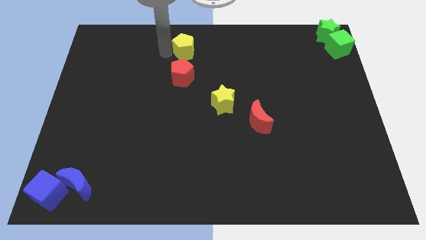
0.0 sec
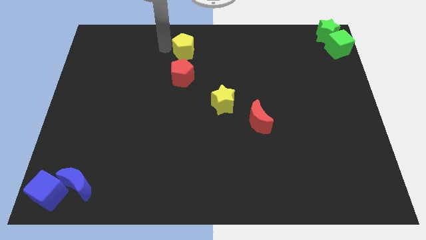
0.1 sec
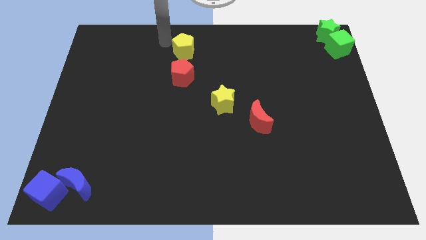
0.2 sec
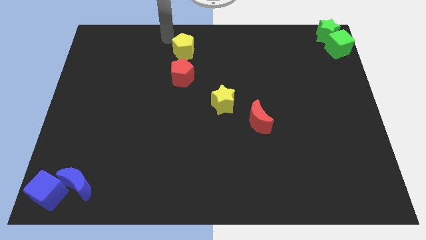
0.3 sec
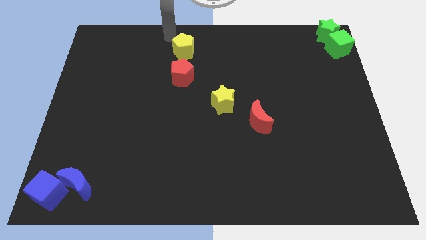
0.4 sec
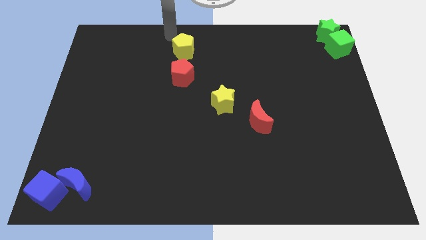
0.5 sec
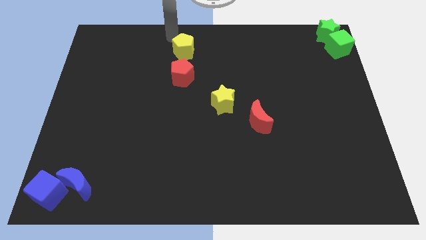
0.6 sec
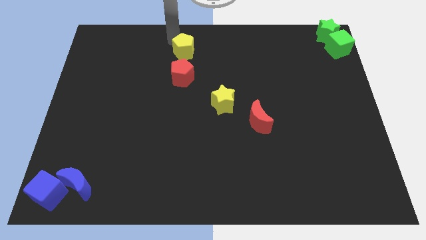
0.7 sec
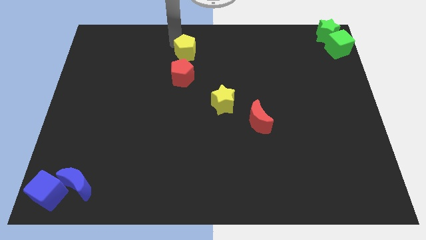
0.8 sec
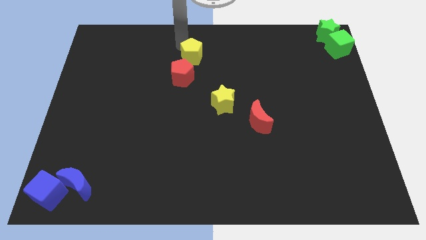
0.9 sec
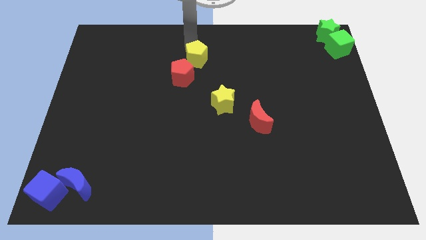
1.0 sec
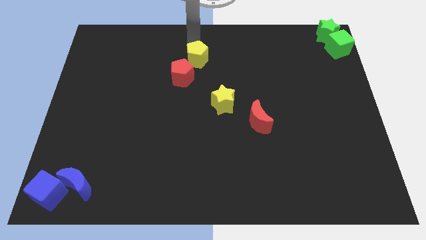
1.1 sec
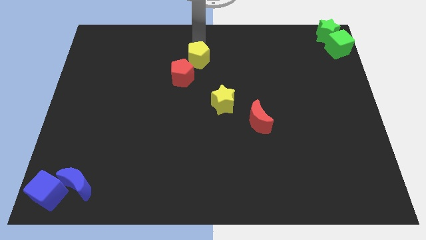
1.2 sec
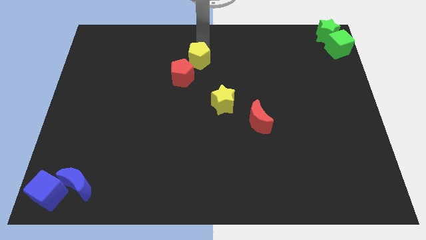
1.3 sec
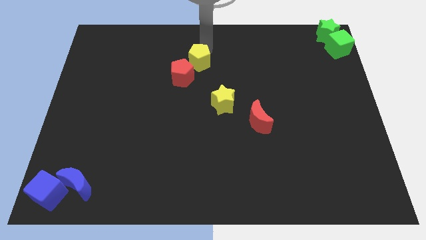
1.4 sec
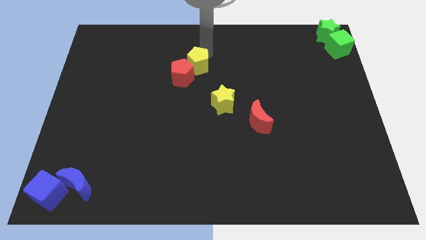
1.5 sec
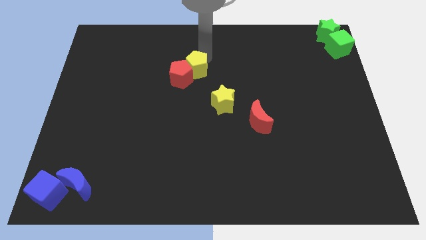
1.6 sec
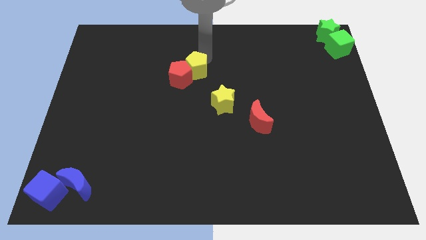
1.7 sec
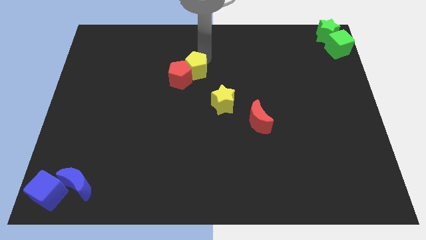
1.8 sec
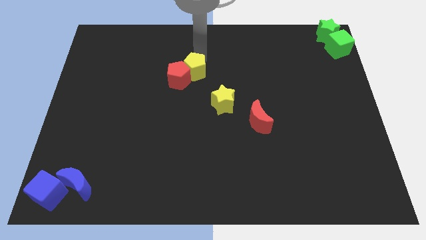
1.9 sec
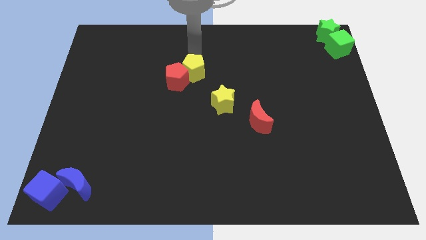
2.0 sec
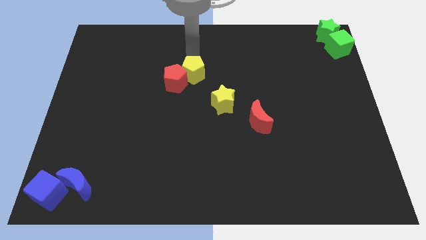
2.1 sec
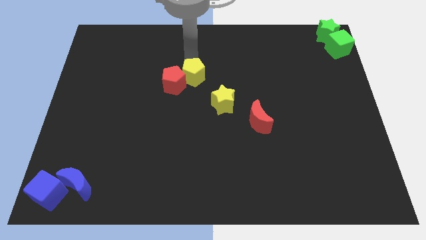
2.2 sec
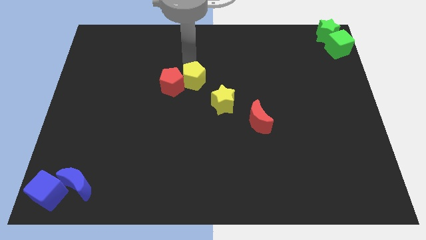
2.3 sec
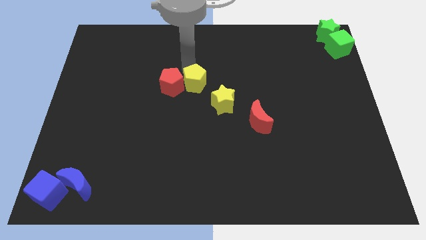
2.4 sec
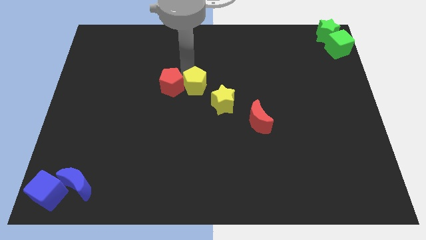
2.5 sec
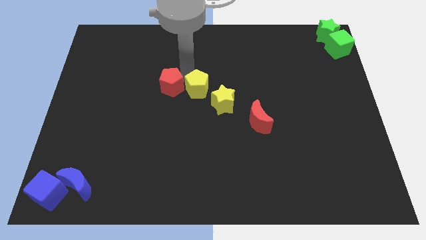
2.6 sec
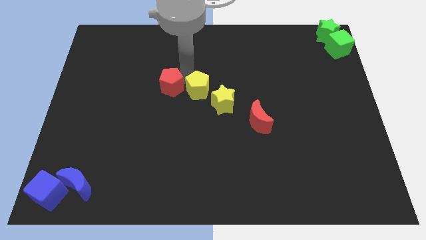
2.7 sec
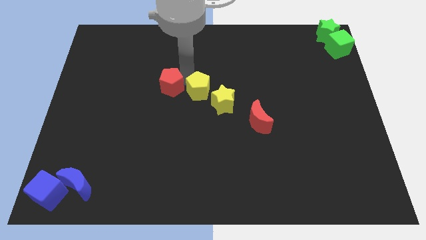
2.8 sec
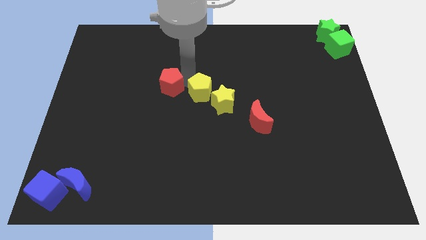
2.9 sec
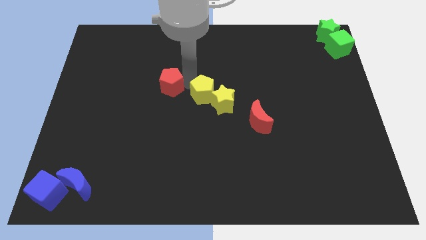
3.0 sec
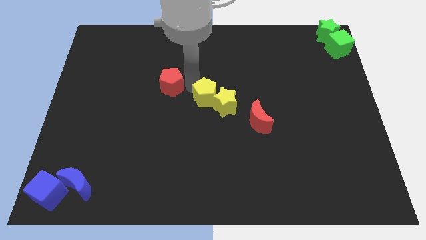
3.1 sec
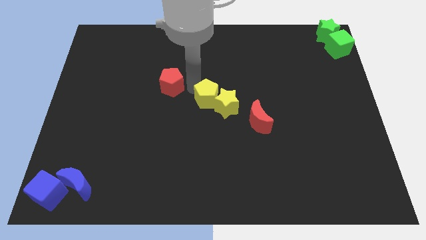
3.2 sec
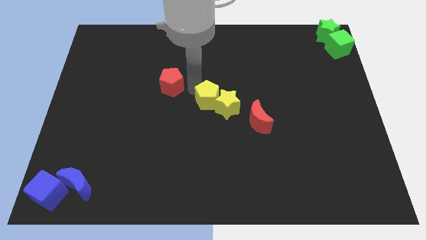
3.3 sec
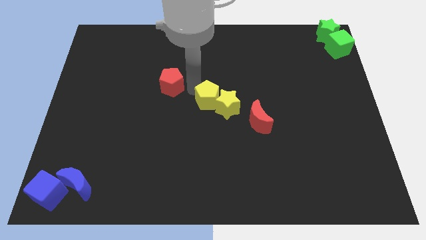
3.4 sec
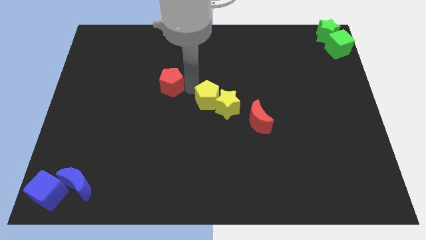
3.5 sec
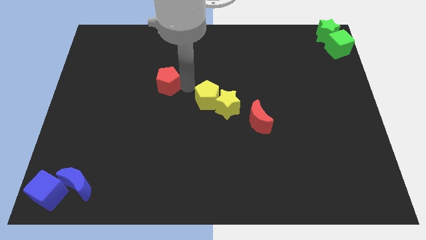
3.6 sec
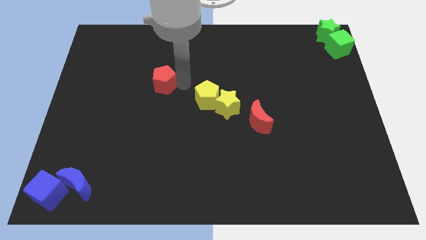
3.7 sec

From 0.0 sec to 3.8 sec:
push yellow pentagon in to yellow star

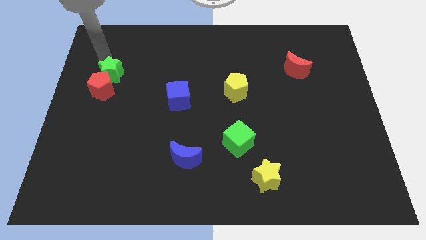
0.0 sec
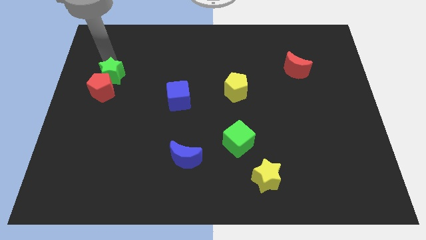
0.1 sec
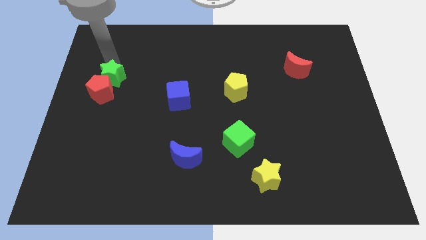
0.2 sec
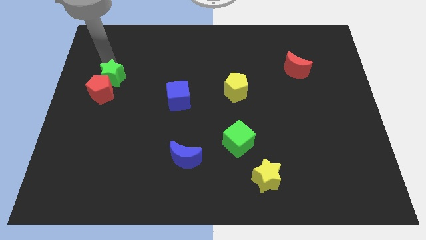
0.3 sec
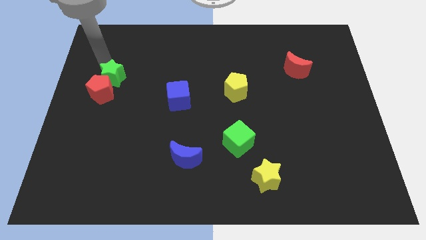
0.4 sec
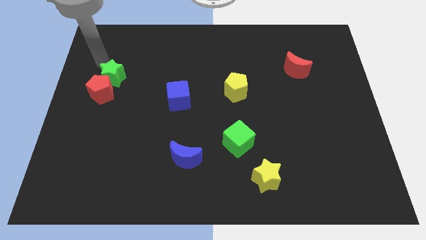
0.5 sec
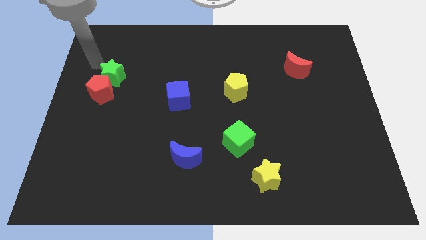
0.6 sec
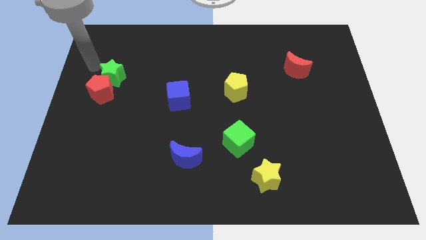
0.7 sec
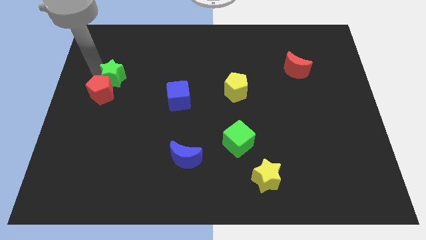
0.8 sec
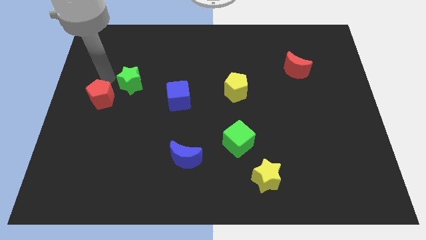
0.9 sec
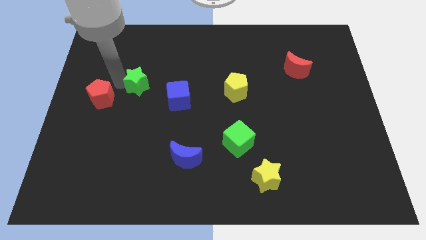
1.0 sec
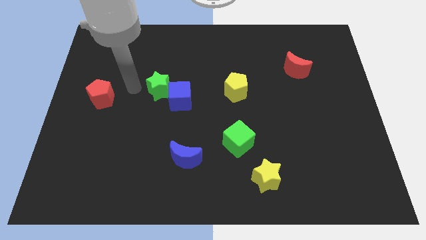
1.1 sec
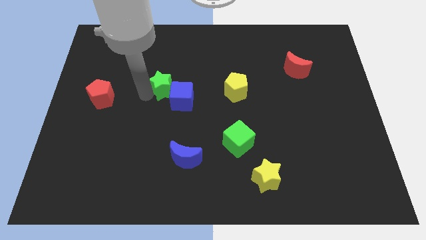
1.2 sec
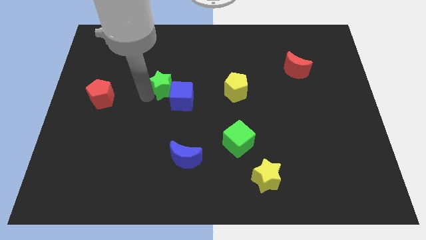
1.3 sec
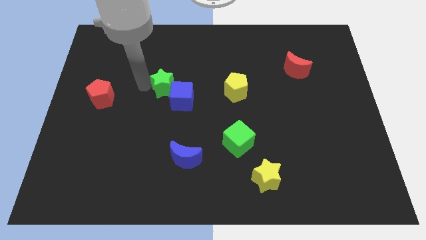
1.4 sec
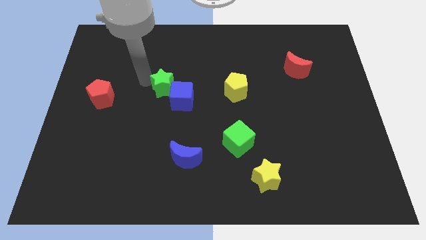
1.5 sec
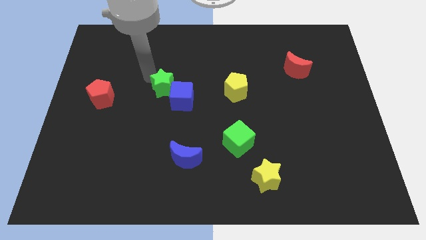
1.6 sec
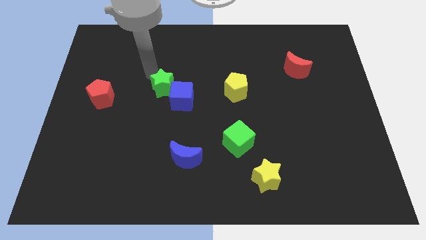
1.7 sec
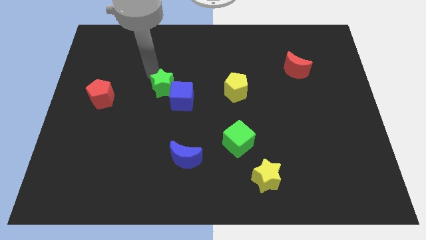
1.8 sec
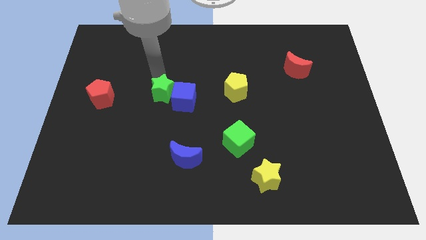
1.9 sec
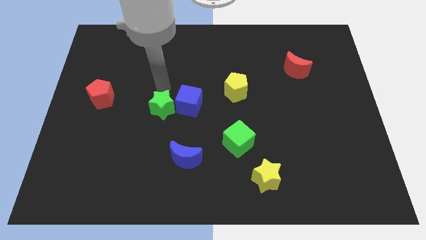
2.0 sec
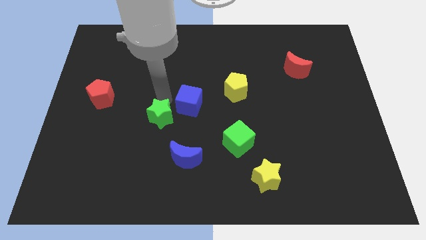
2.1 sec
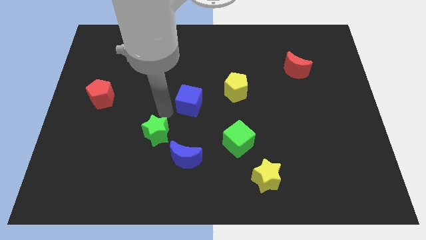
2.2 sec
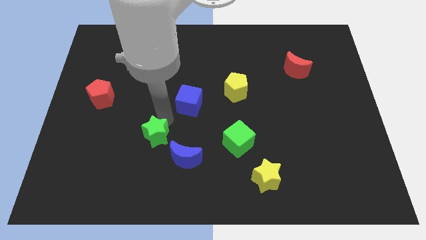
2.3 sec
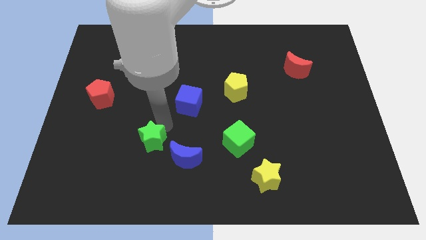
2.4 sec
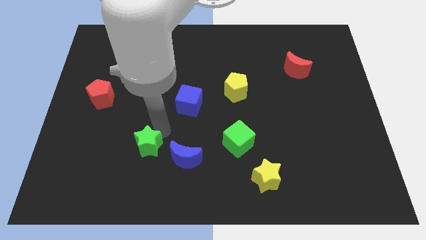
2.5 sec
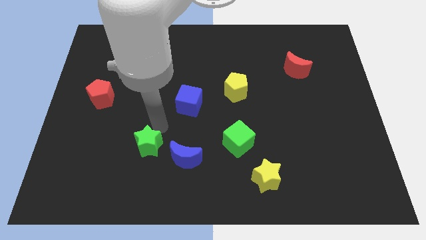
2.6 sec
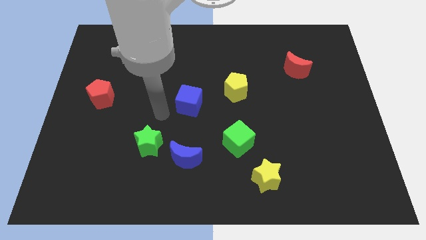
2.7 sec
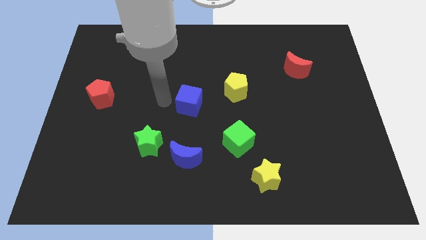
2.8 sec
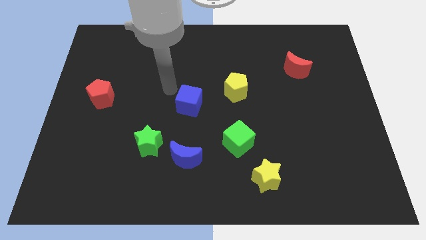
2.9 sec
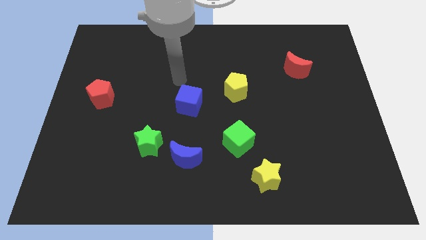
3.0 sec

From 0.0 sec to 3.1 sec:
move the green star top left to the blue crescent

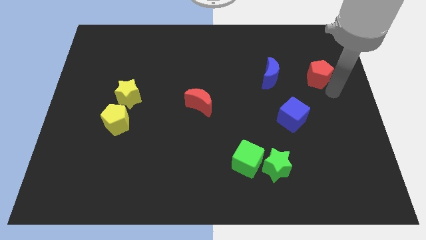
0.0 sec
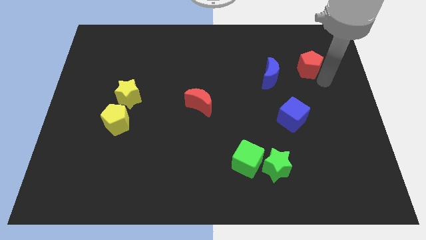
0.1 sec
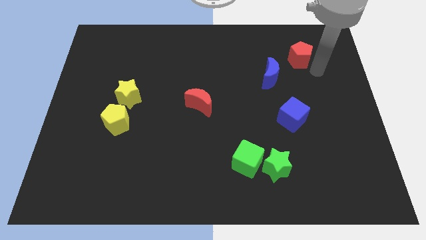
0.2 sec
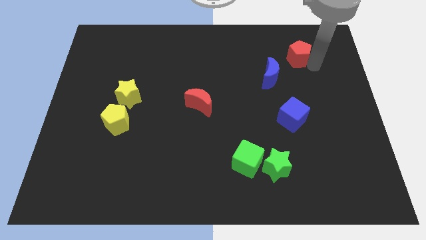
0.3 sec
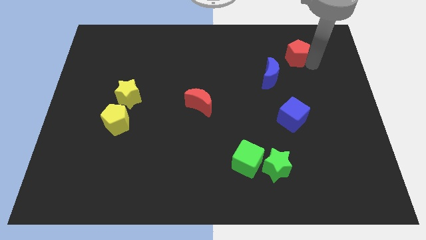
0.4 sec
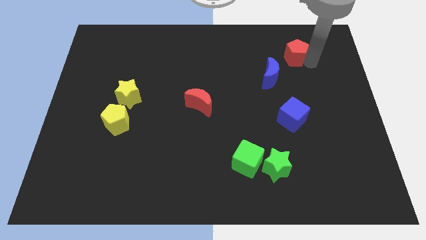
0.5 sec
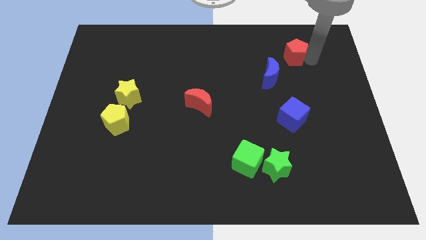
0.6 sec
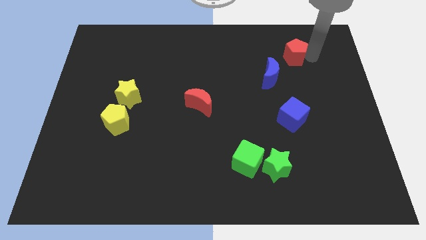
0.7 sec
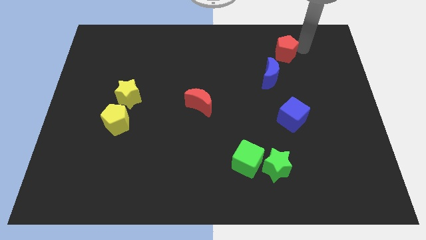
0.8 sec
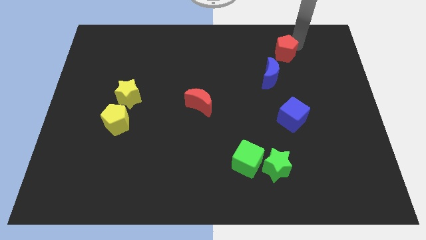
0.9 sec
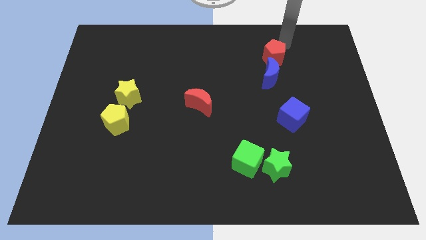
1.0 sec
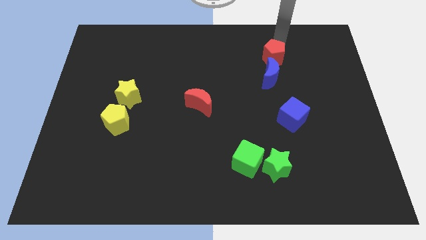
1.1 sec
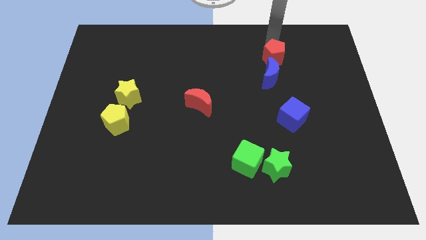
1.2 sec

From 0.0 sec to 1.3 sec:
place the red pentagon above the blue crescent

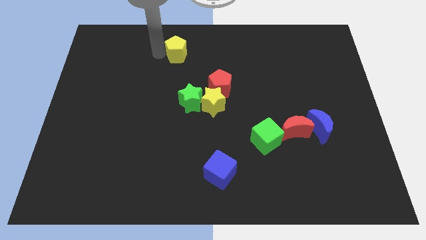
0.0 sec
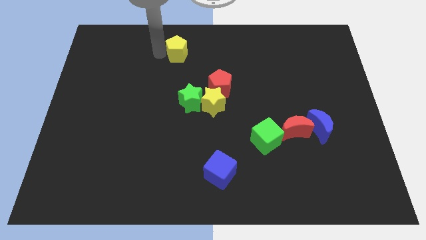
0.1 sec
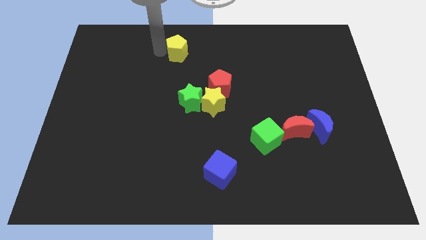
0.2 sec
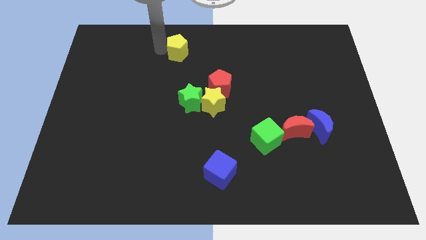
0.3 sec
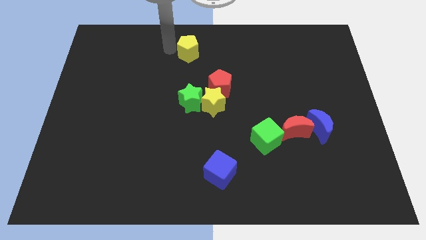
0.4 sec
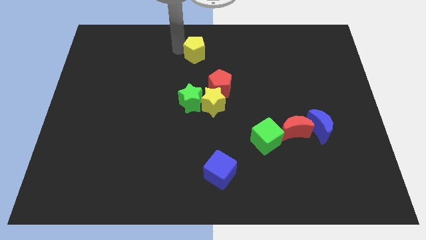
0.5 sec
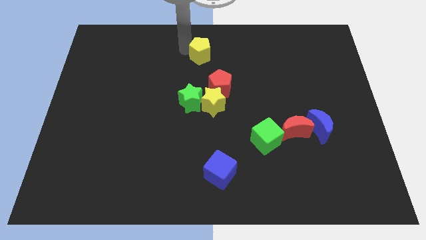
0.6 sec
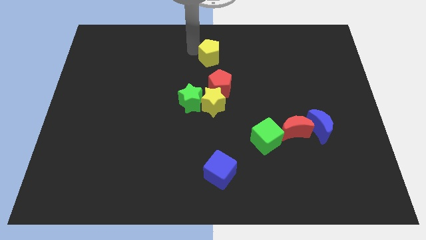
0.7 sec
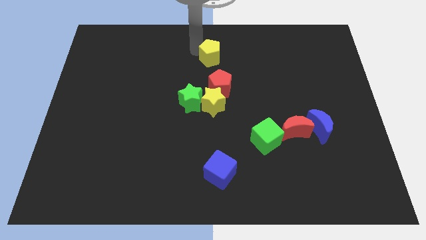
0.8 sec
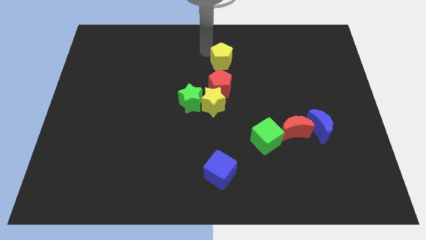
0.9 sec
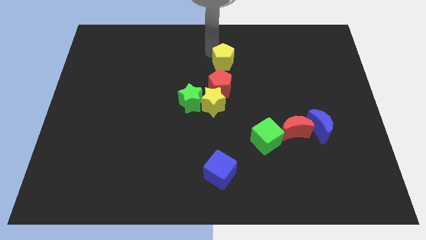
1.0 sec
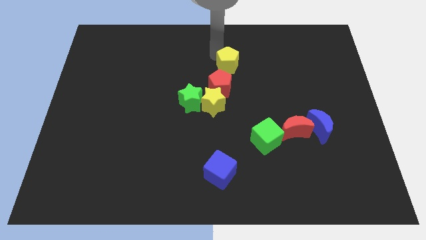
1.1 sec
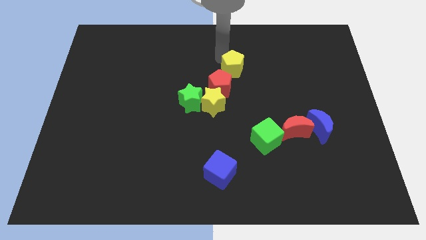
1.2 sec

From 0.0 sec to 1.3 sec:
move the yellow pentagon above the red pentagon
